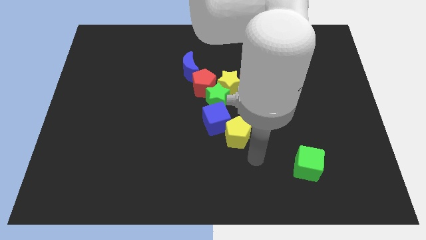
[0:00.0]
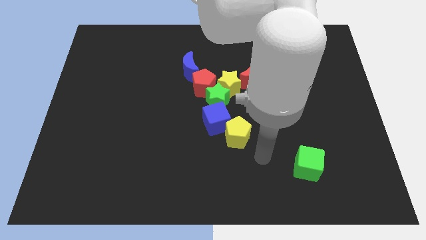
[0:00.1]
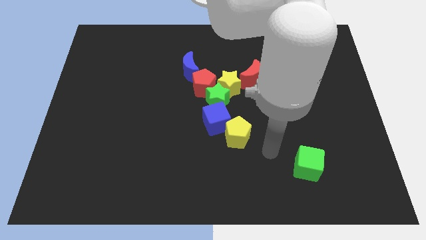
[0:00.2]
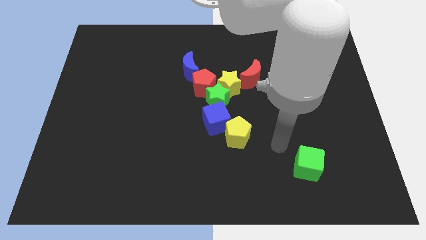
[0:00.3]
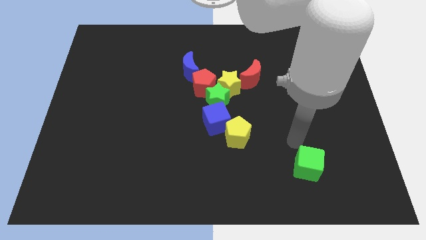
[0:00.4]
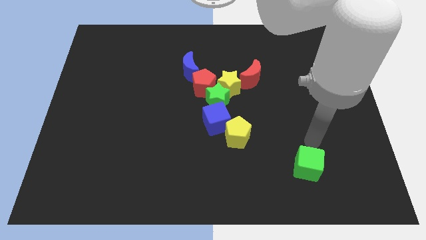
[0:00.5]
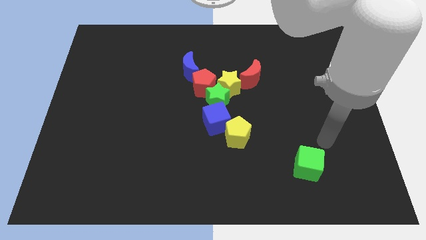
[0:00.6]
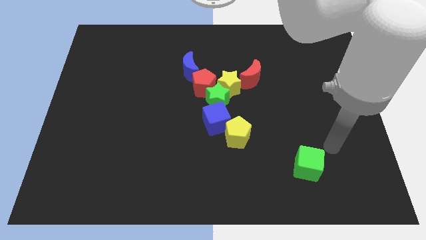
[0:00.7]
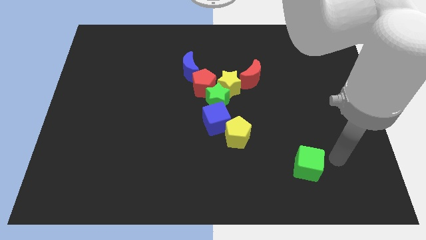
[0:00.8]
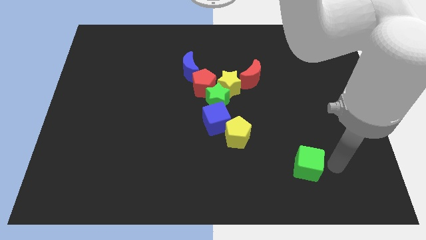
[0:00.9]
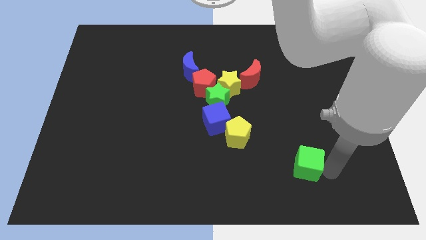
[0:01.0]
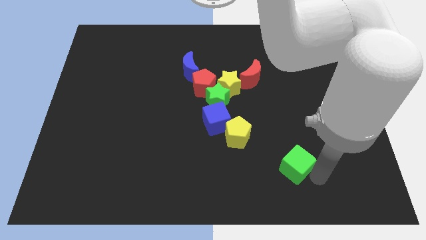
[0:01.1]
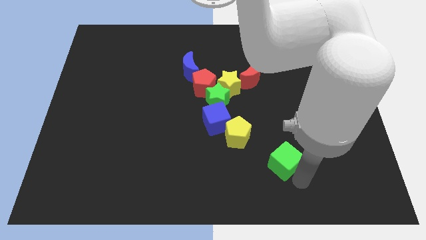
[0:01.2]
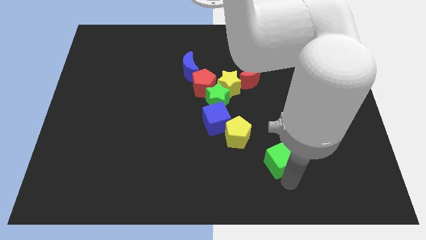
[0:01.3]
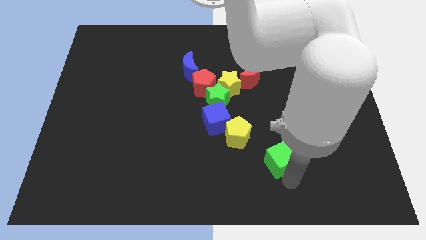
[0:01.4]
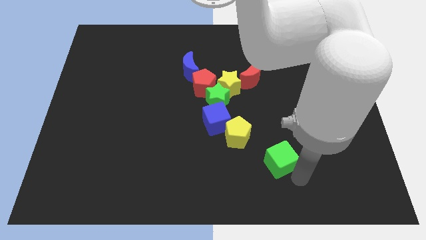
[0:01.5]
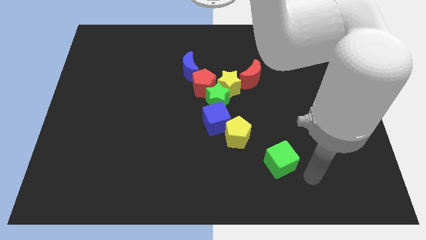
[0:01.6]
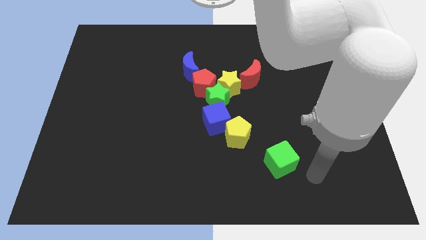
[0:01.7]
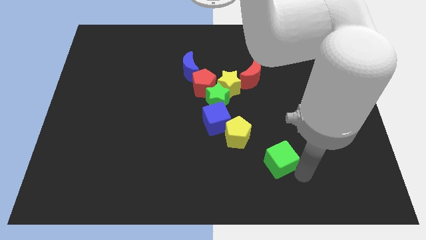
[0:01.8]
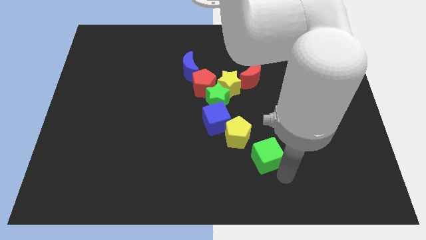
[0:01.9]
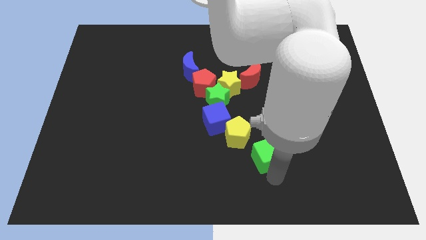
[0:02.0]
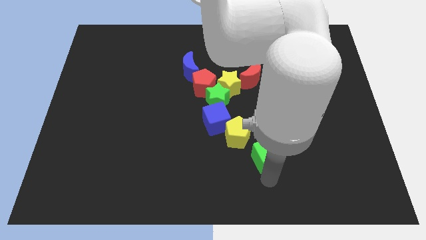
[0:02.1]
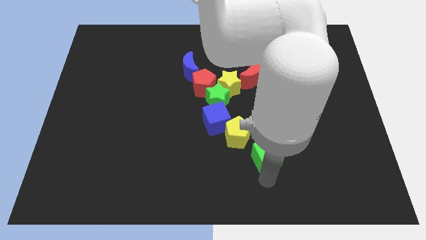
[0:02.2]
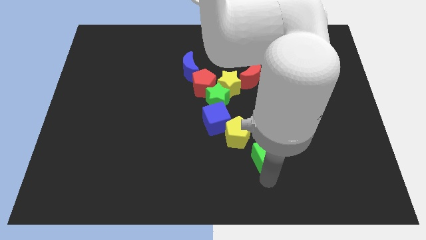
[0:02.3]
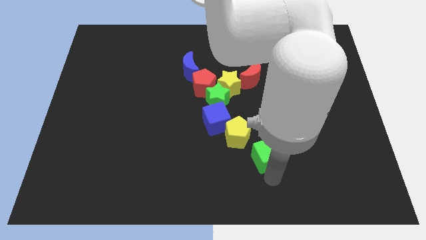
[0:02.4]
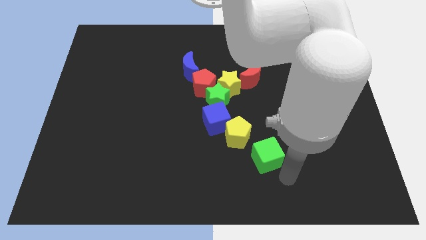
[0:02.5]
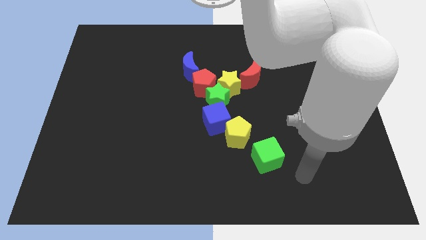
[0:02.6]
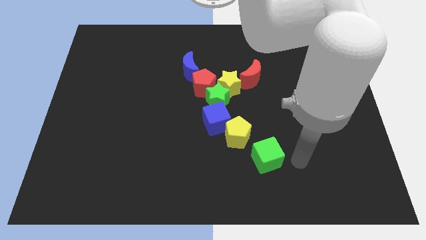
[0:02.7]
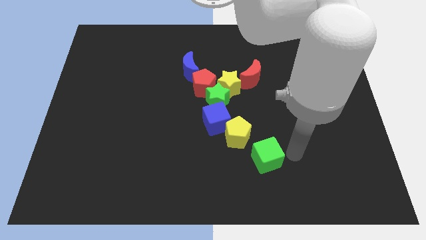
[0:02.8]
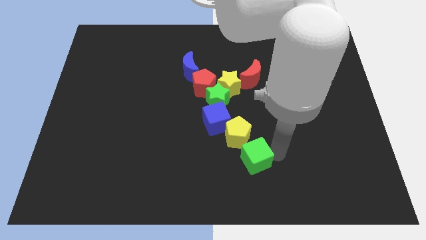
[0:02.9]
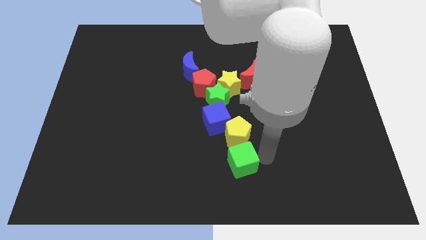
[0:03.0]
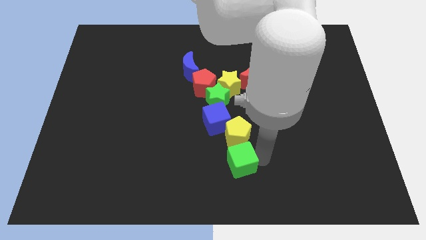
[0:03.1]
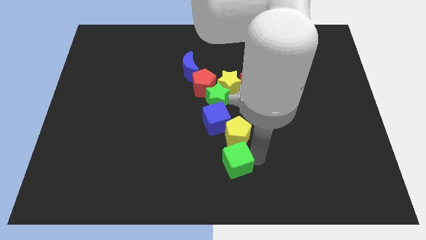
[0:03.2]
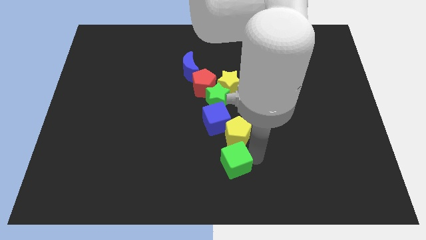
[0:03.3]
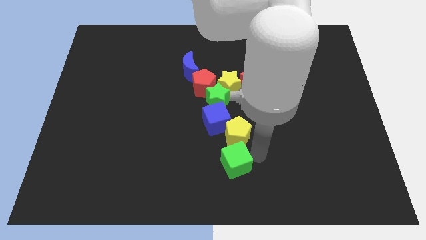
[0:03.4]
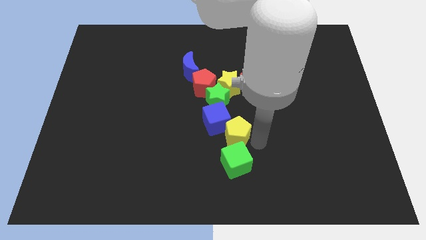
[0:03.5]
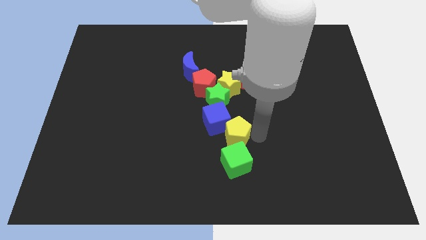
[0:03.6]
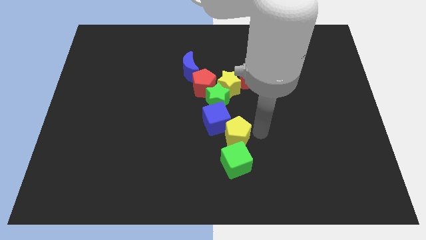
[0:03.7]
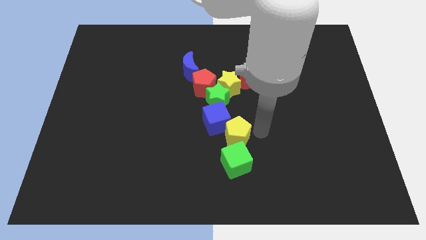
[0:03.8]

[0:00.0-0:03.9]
move green cube to the bottom of yellow pentagon

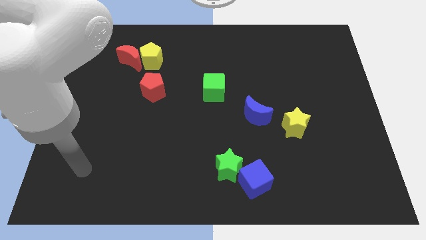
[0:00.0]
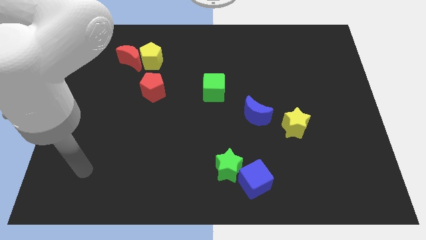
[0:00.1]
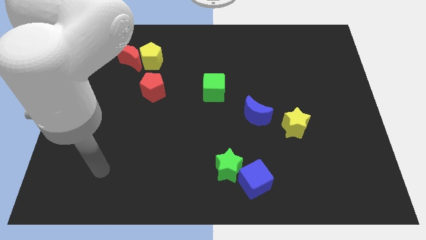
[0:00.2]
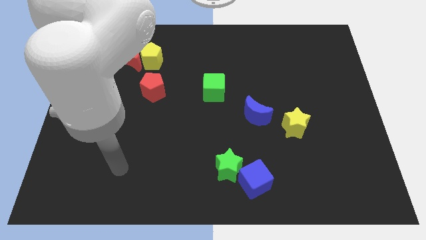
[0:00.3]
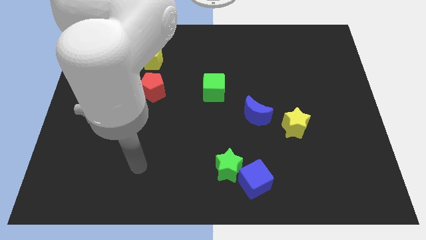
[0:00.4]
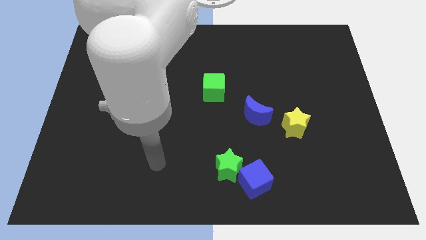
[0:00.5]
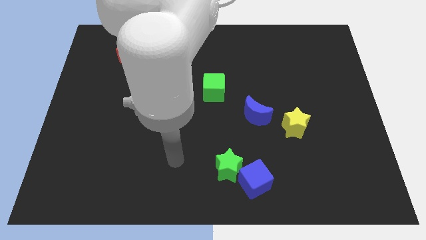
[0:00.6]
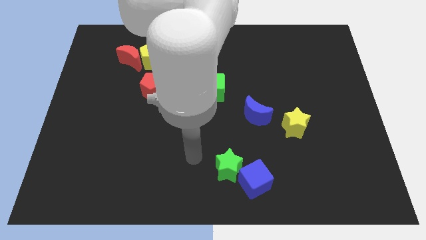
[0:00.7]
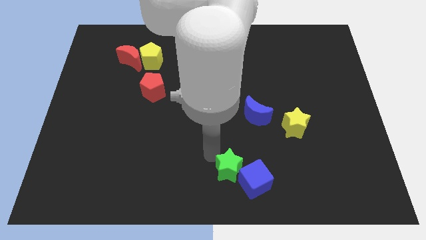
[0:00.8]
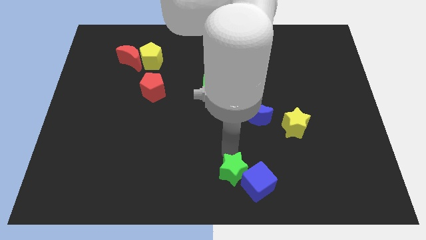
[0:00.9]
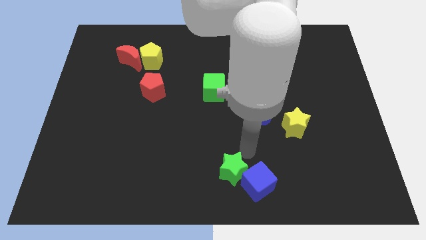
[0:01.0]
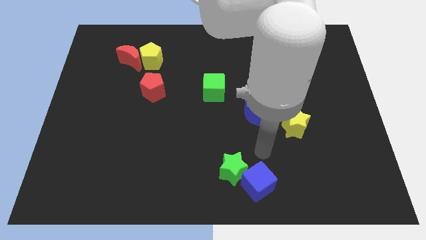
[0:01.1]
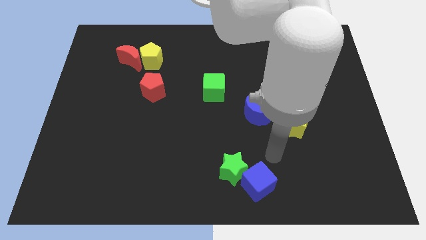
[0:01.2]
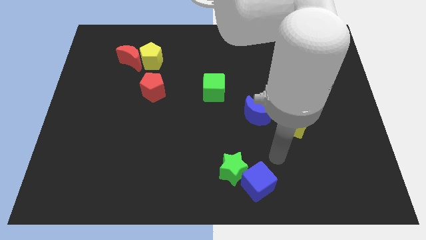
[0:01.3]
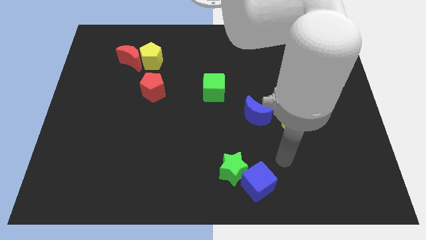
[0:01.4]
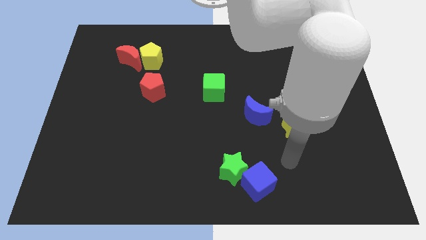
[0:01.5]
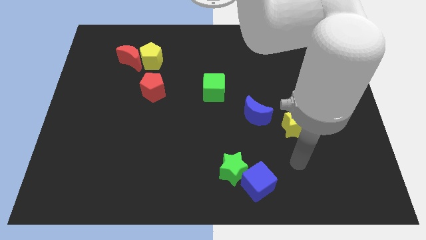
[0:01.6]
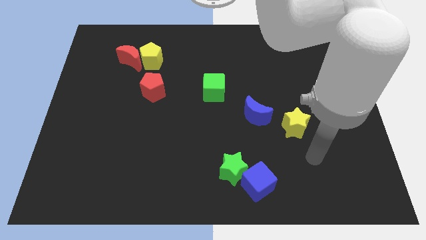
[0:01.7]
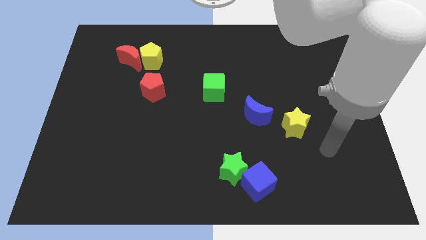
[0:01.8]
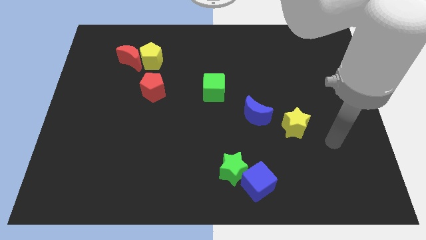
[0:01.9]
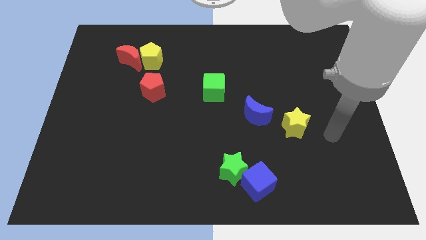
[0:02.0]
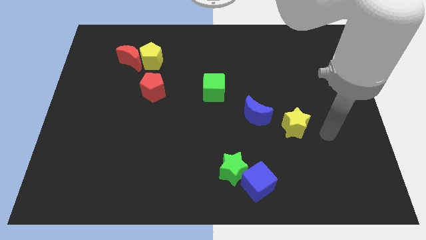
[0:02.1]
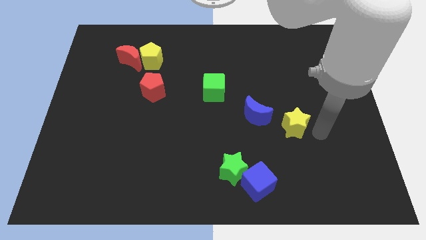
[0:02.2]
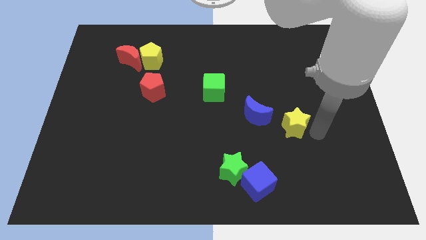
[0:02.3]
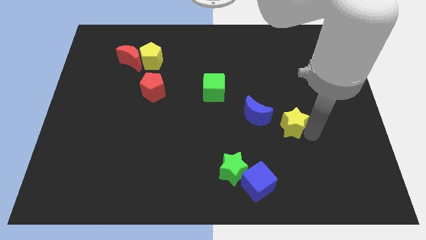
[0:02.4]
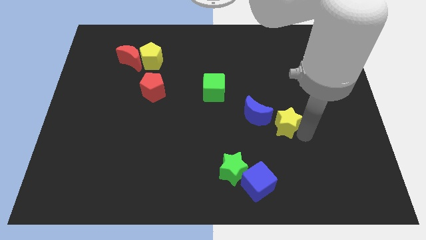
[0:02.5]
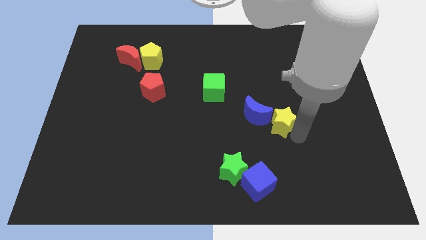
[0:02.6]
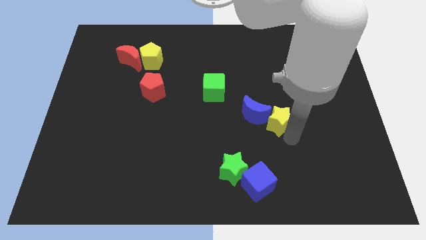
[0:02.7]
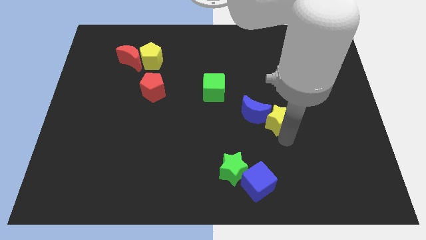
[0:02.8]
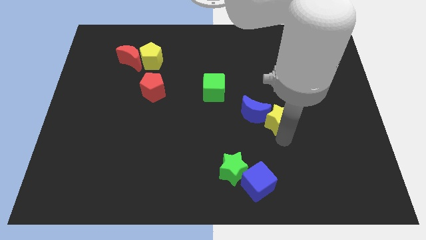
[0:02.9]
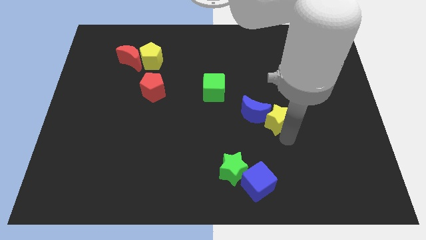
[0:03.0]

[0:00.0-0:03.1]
push the yellow star slightly to the left

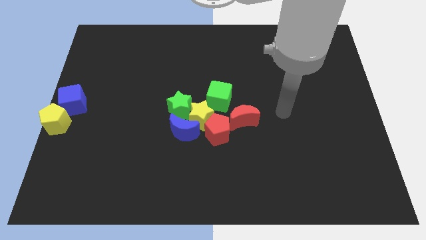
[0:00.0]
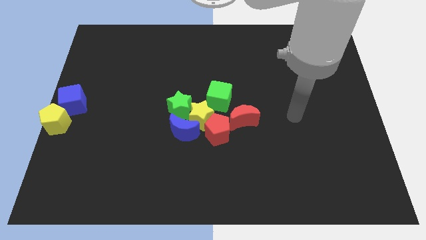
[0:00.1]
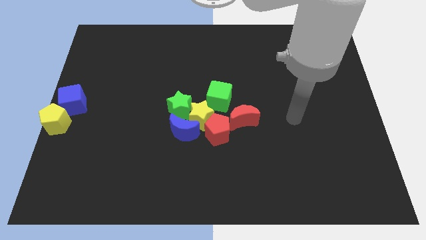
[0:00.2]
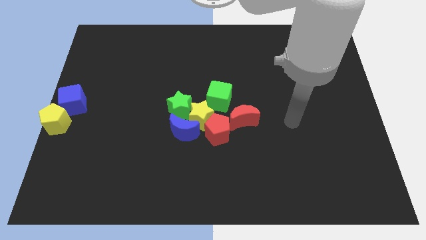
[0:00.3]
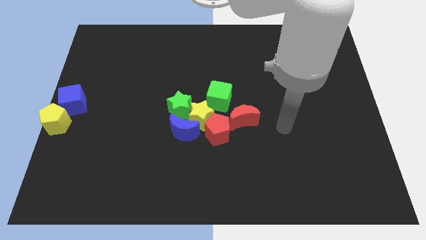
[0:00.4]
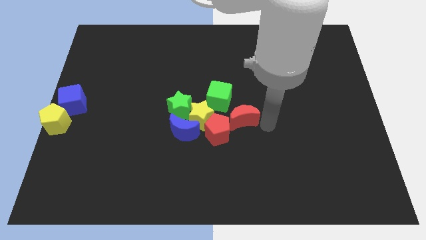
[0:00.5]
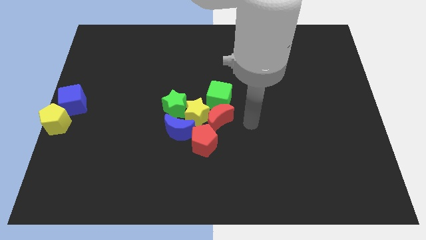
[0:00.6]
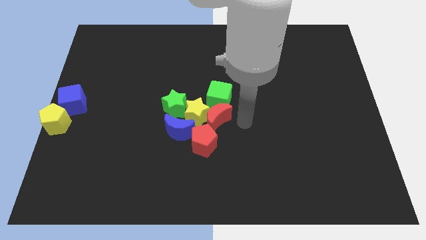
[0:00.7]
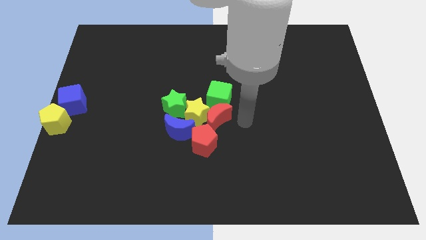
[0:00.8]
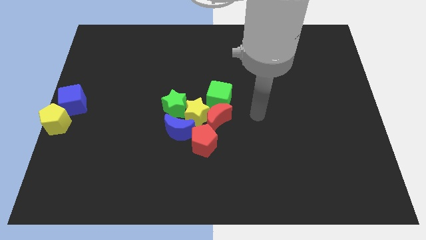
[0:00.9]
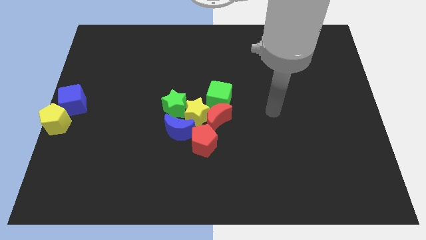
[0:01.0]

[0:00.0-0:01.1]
move the red crescent into the group of blocks

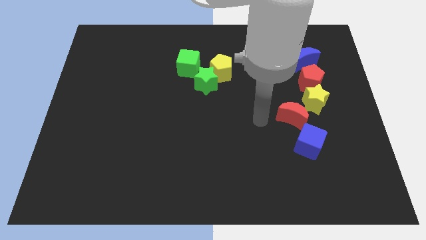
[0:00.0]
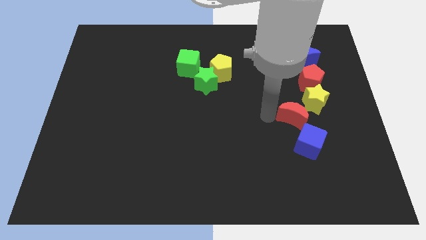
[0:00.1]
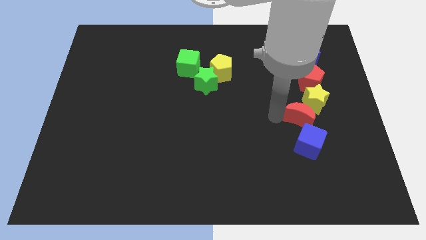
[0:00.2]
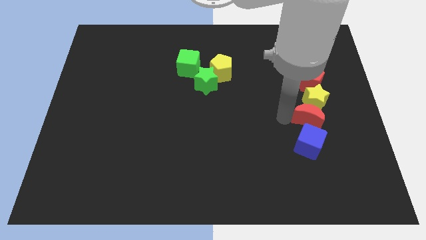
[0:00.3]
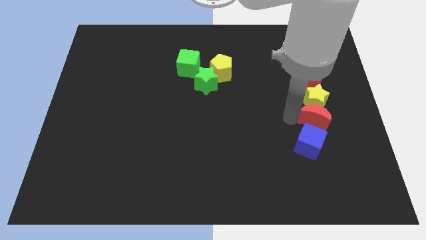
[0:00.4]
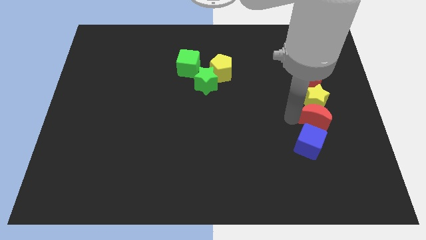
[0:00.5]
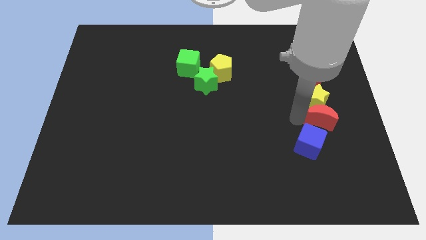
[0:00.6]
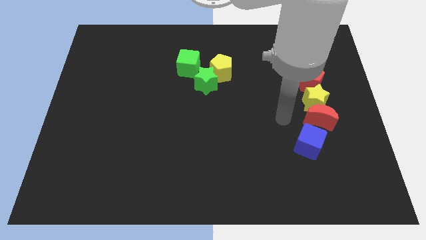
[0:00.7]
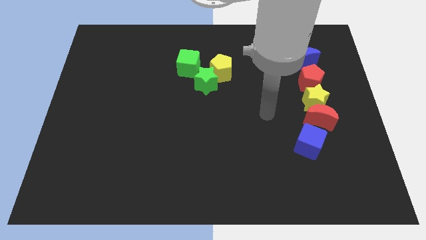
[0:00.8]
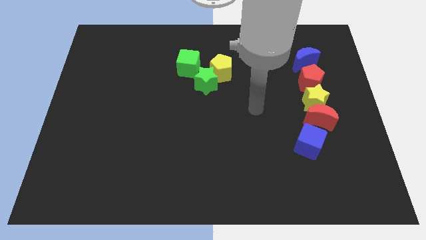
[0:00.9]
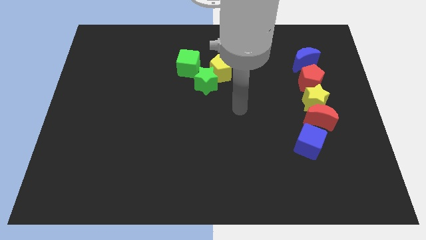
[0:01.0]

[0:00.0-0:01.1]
slide red moon below yellow star
